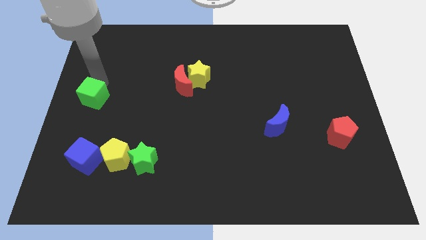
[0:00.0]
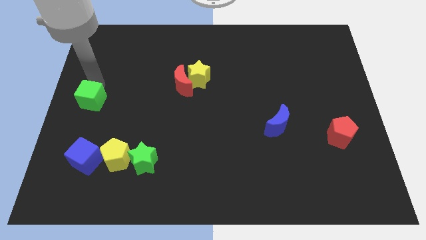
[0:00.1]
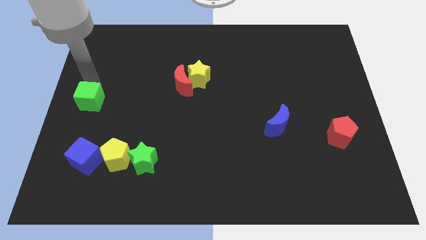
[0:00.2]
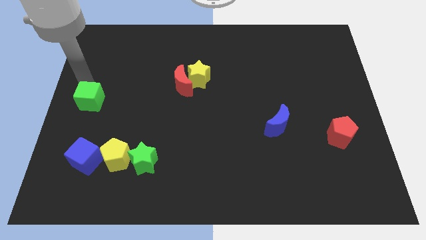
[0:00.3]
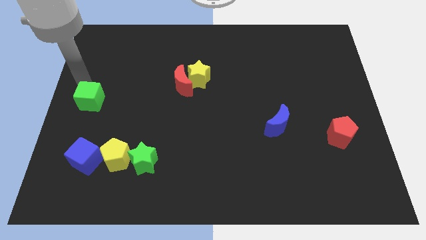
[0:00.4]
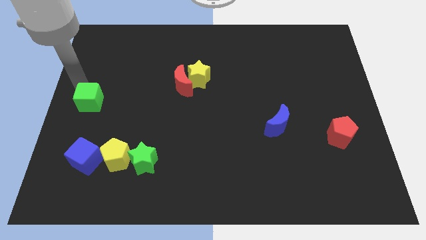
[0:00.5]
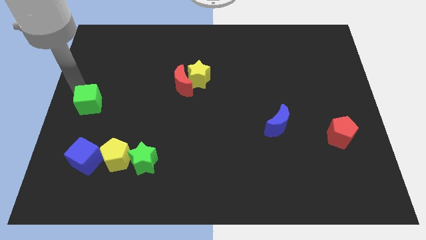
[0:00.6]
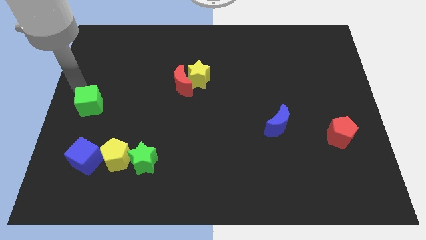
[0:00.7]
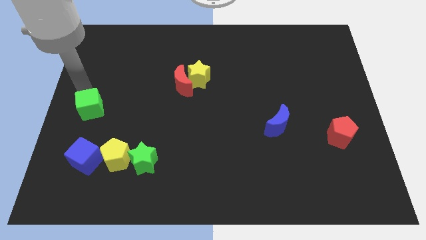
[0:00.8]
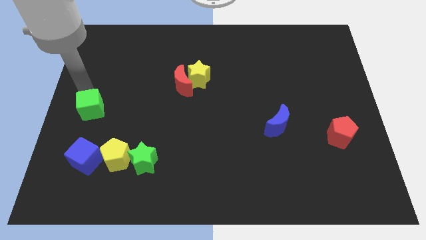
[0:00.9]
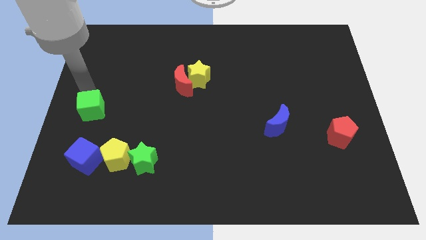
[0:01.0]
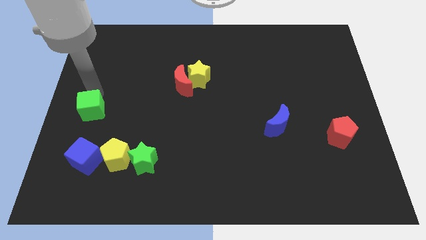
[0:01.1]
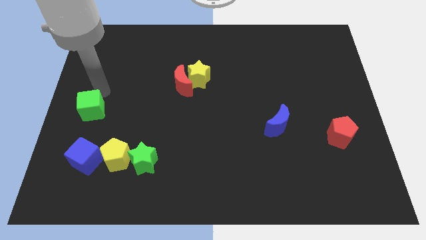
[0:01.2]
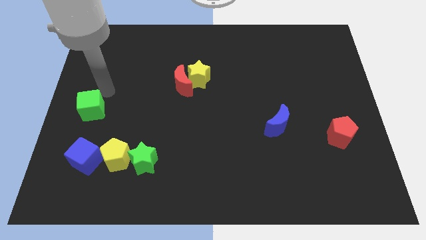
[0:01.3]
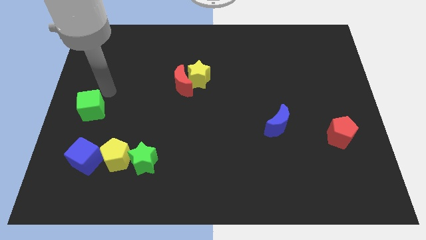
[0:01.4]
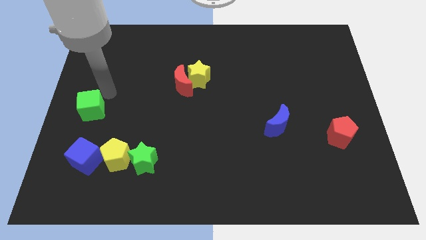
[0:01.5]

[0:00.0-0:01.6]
place green cube above the blue cube

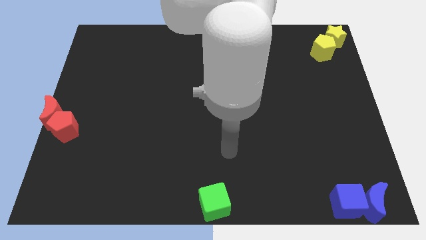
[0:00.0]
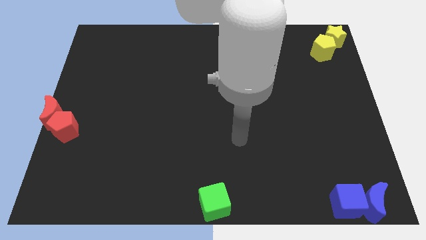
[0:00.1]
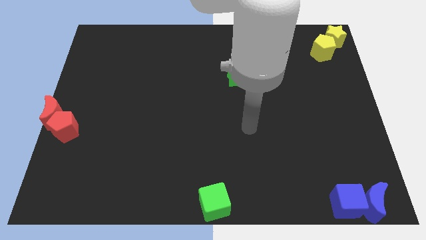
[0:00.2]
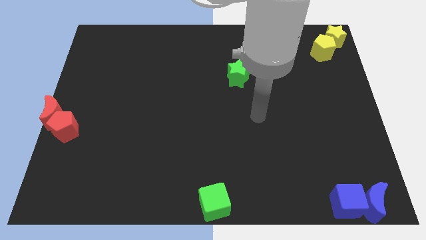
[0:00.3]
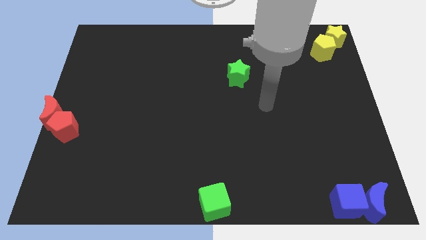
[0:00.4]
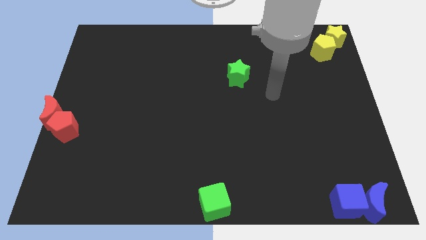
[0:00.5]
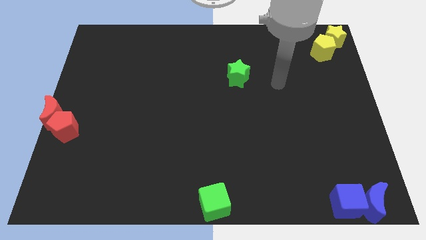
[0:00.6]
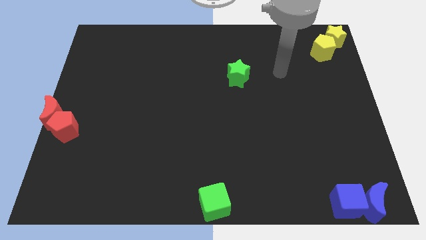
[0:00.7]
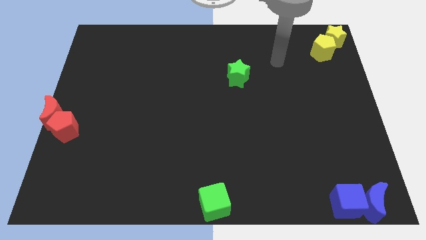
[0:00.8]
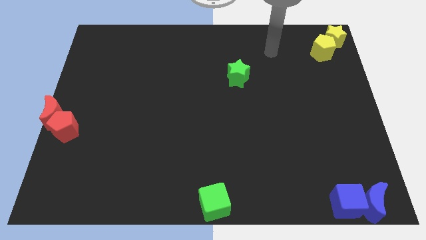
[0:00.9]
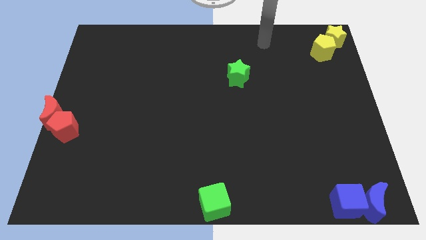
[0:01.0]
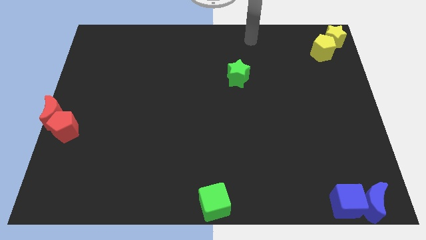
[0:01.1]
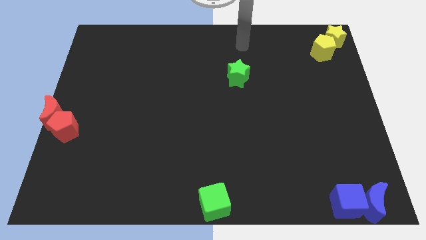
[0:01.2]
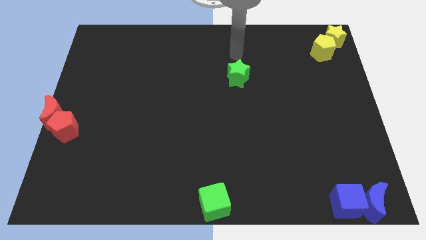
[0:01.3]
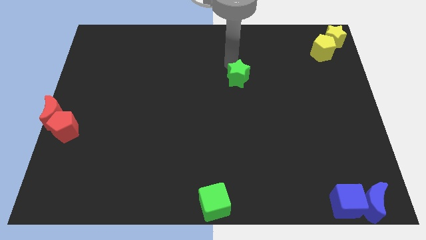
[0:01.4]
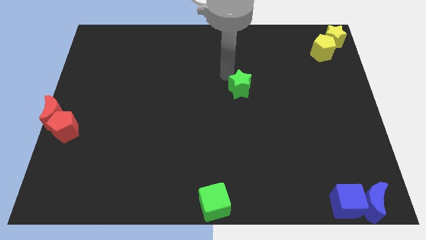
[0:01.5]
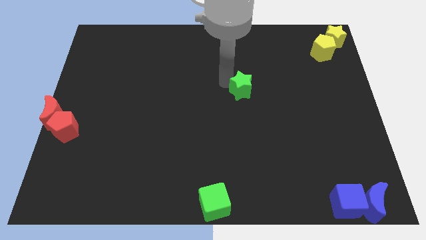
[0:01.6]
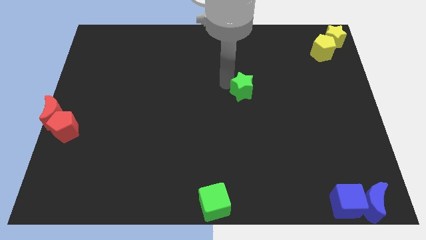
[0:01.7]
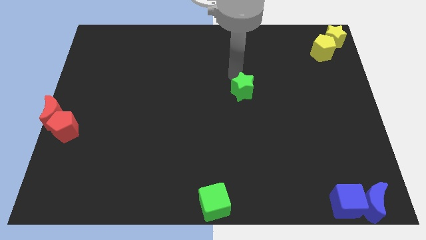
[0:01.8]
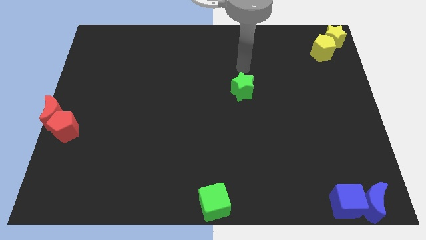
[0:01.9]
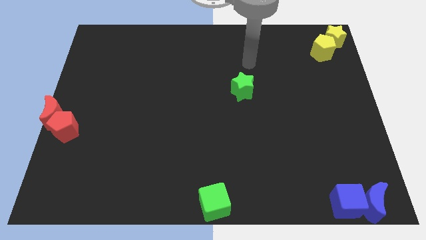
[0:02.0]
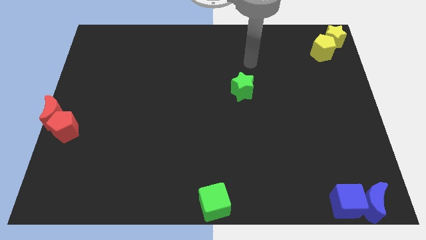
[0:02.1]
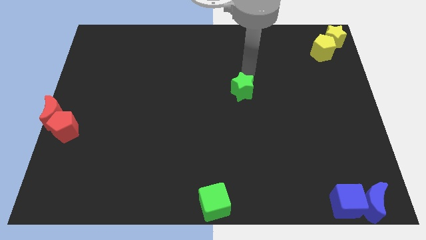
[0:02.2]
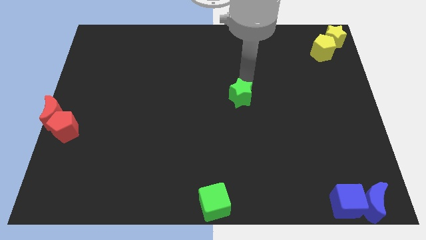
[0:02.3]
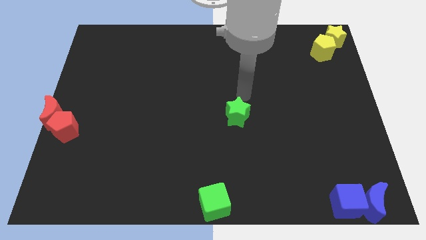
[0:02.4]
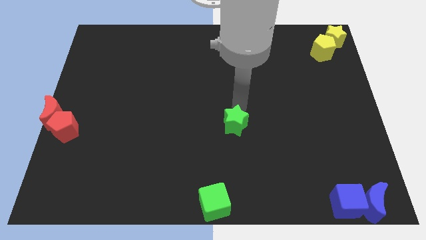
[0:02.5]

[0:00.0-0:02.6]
push the green star towards the bottom

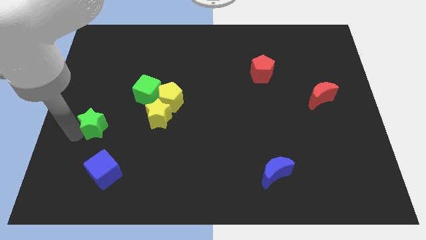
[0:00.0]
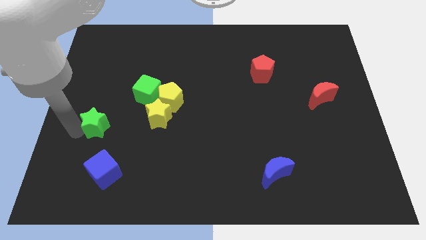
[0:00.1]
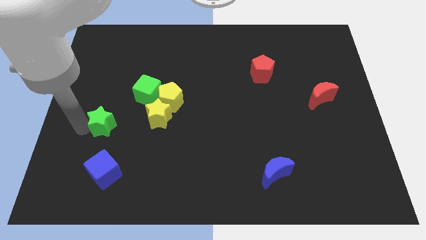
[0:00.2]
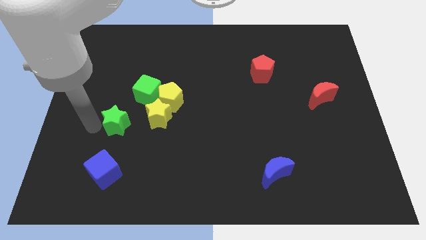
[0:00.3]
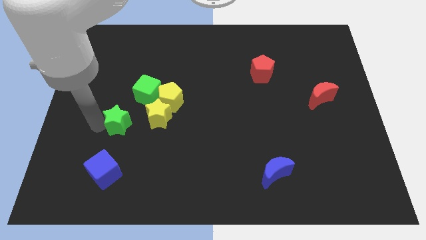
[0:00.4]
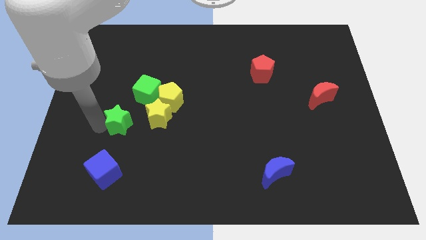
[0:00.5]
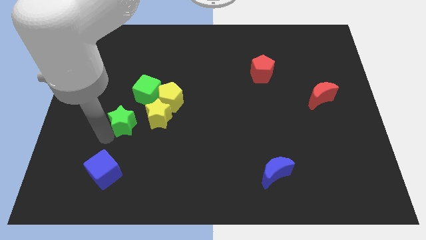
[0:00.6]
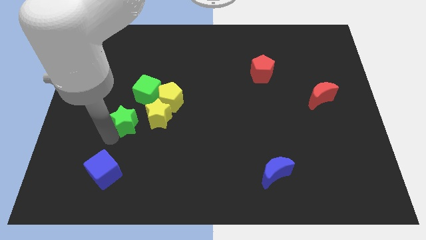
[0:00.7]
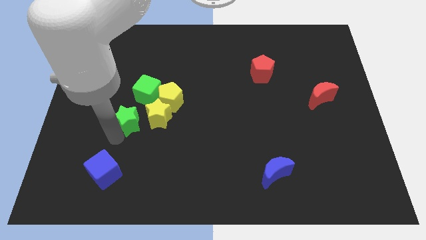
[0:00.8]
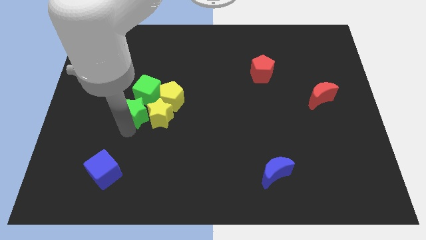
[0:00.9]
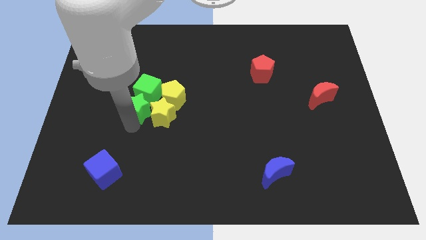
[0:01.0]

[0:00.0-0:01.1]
place green star to the left of yellow star

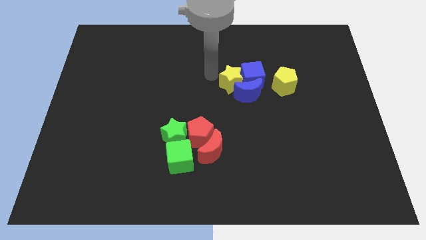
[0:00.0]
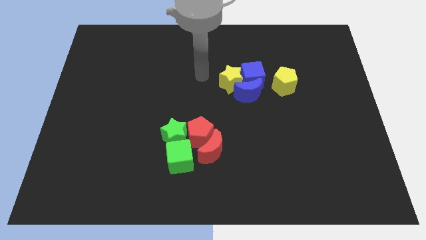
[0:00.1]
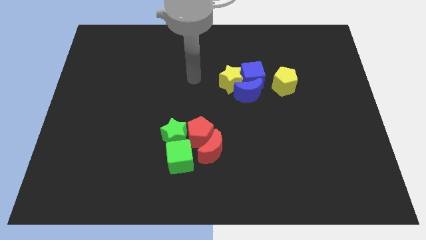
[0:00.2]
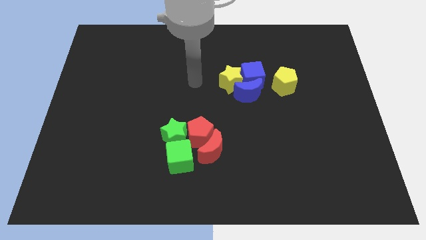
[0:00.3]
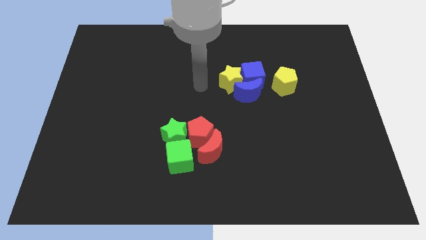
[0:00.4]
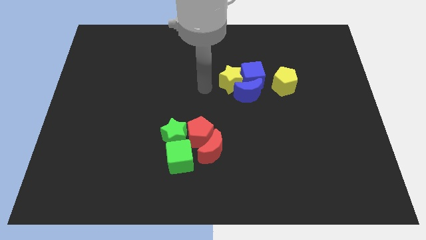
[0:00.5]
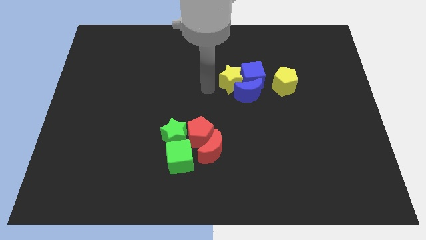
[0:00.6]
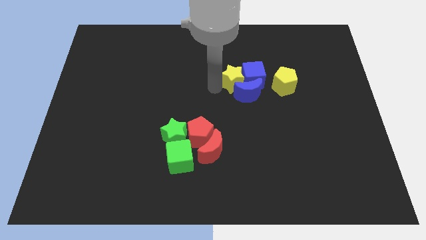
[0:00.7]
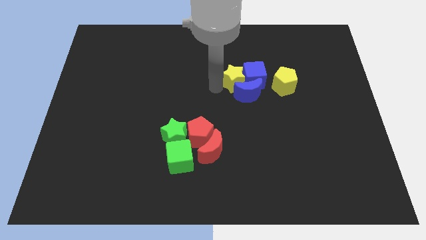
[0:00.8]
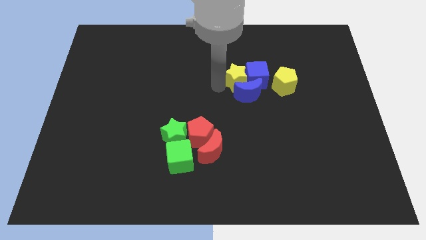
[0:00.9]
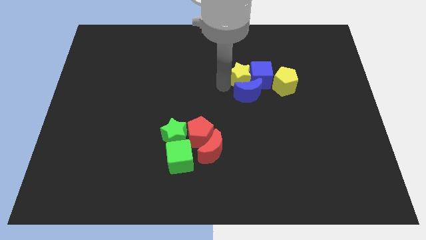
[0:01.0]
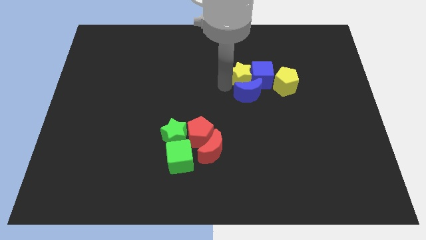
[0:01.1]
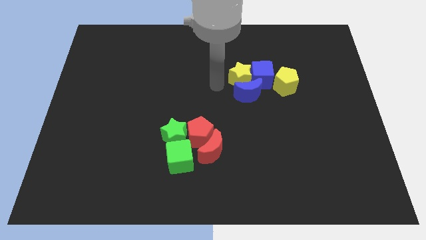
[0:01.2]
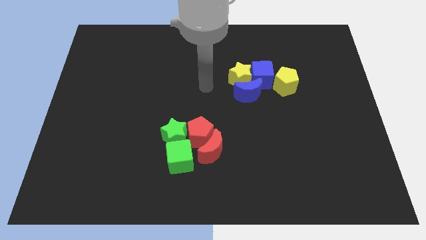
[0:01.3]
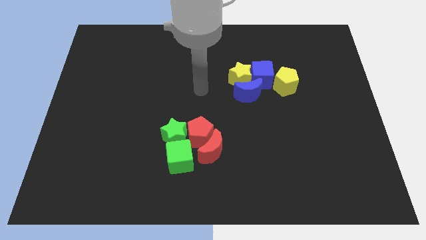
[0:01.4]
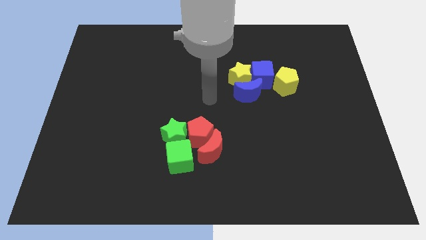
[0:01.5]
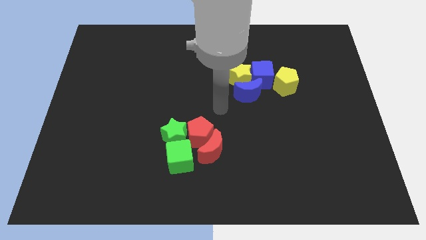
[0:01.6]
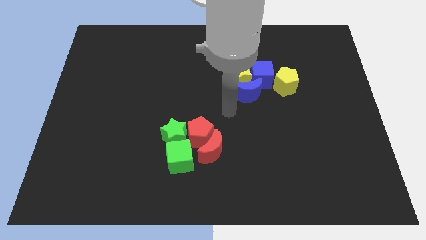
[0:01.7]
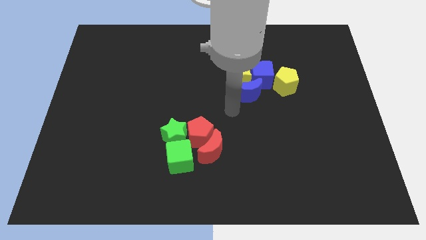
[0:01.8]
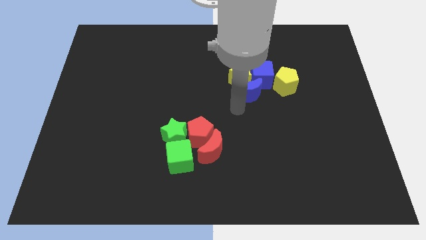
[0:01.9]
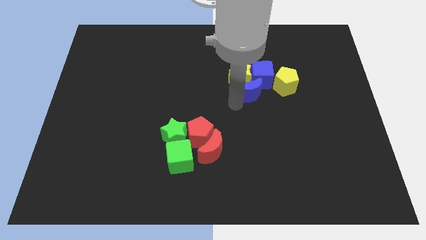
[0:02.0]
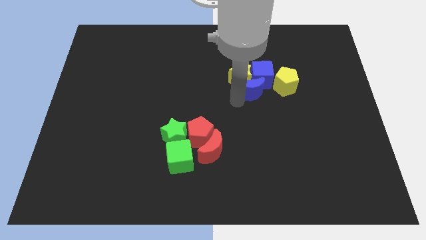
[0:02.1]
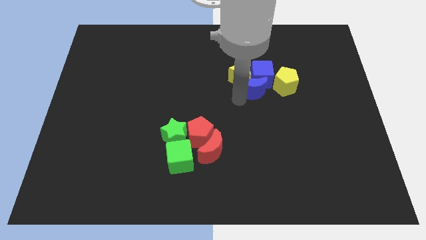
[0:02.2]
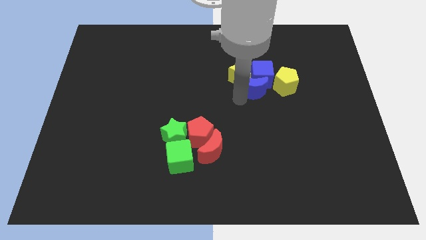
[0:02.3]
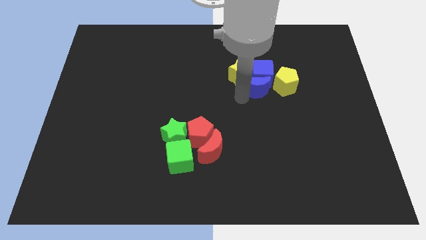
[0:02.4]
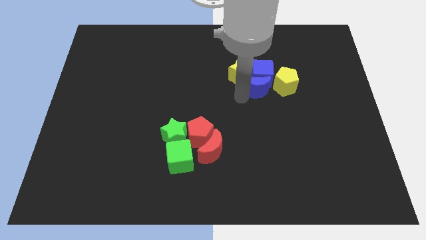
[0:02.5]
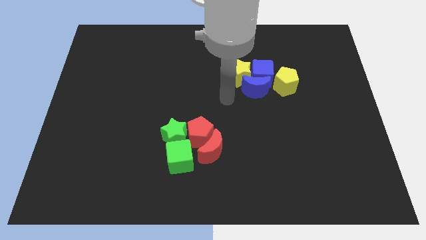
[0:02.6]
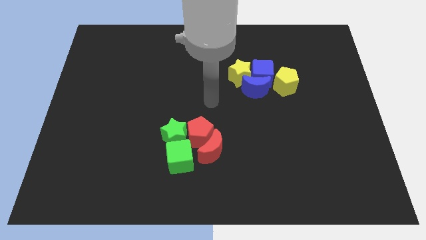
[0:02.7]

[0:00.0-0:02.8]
push yellow star and blue moon in to blue cube

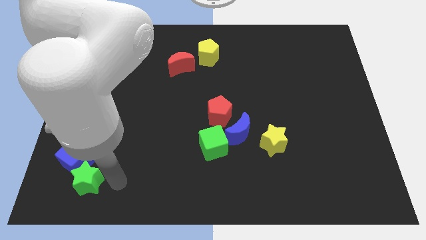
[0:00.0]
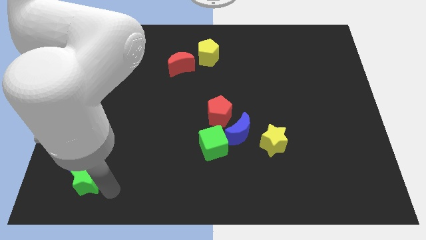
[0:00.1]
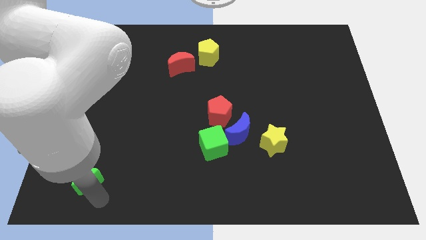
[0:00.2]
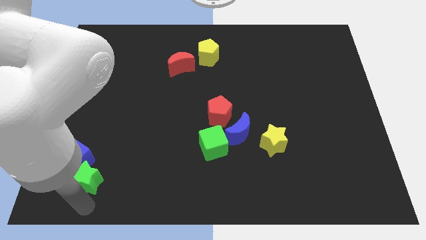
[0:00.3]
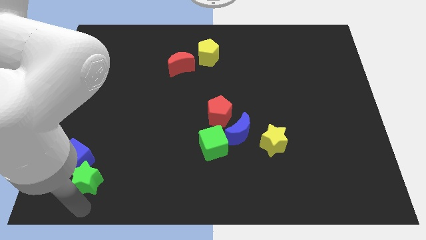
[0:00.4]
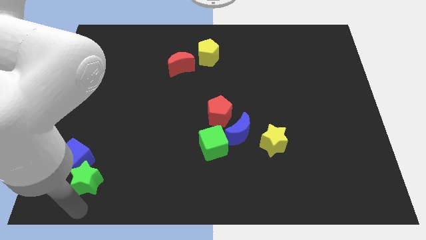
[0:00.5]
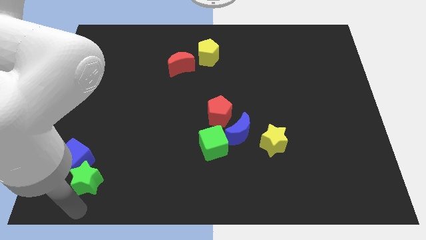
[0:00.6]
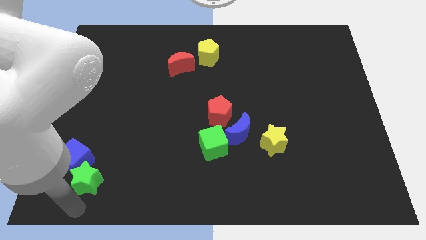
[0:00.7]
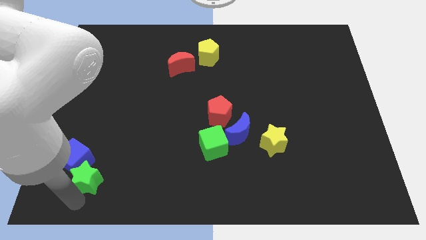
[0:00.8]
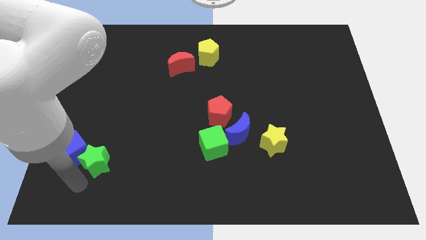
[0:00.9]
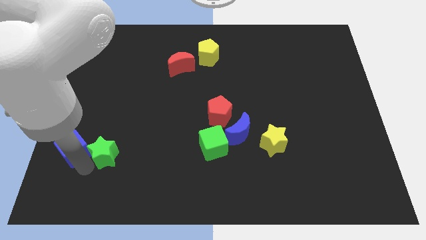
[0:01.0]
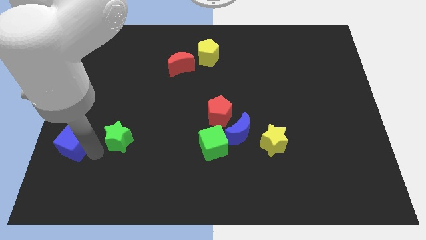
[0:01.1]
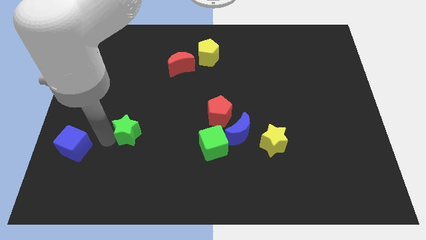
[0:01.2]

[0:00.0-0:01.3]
separate the green star from the blue cube
